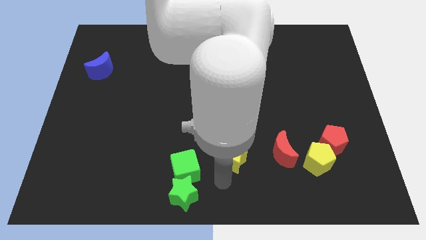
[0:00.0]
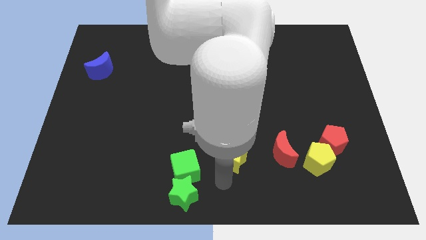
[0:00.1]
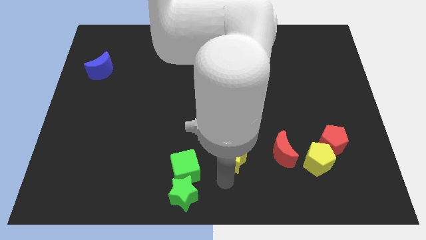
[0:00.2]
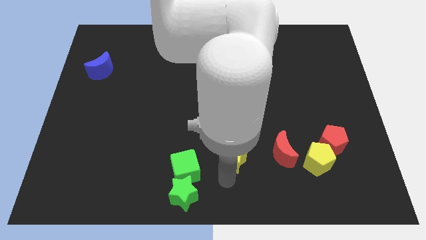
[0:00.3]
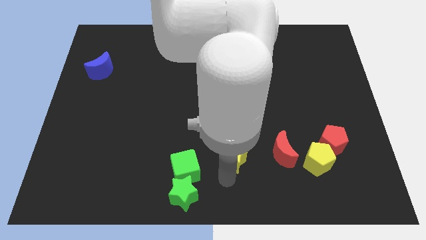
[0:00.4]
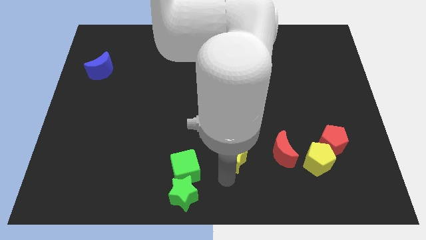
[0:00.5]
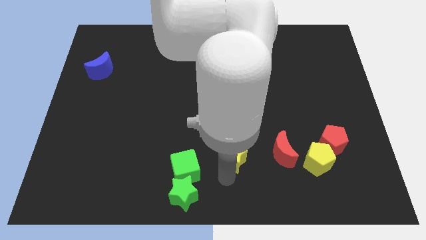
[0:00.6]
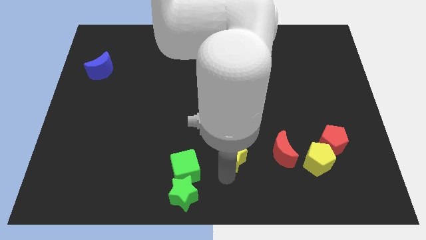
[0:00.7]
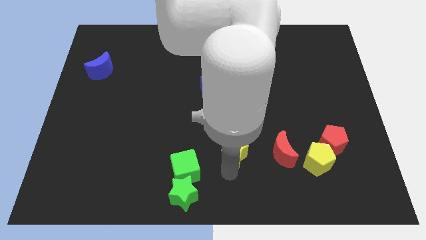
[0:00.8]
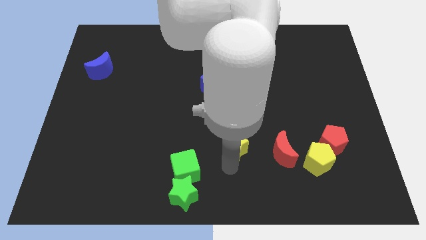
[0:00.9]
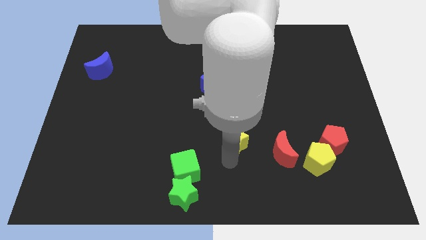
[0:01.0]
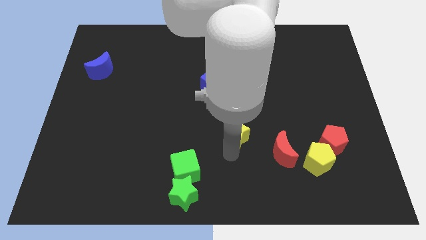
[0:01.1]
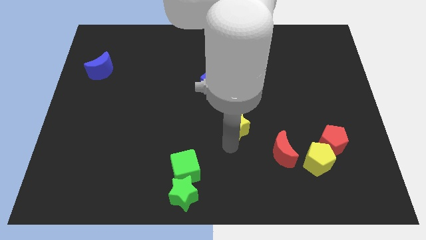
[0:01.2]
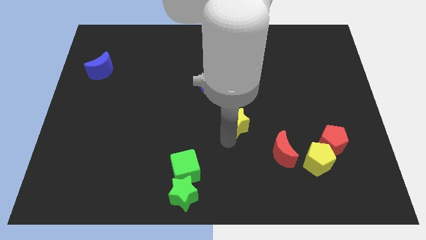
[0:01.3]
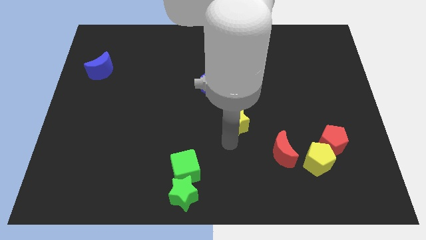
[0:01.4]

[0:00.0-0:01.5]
push the yellow star upward

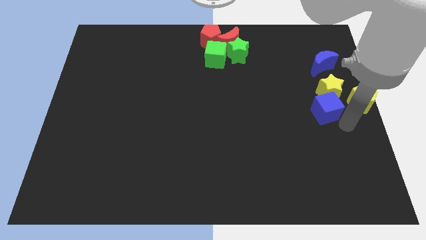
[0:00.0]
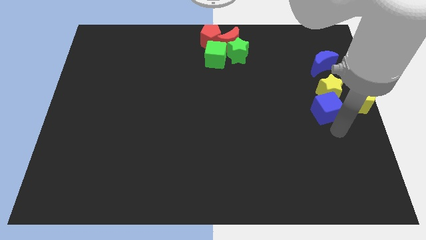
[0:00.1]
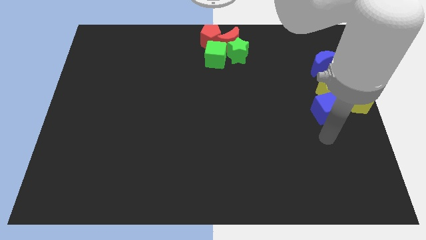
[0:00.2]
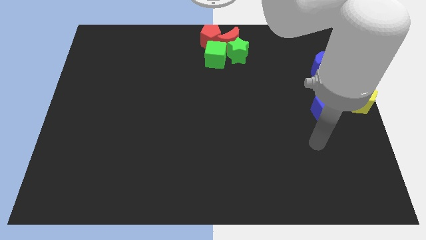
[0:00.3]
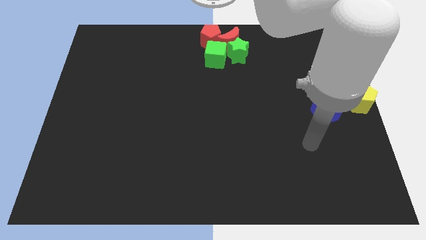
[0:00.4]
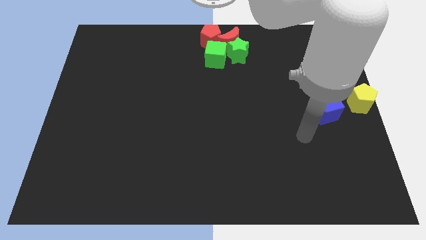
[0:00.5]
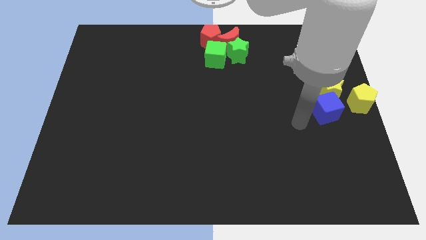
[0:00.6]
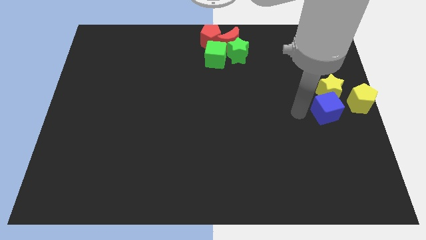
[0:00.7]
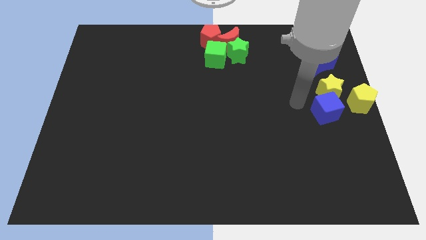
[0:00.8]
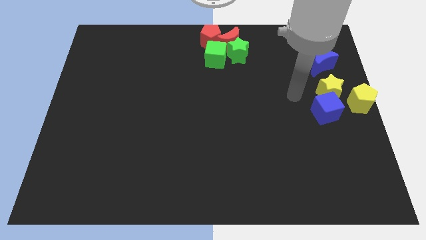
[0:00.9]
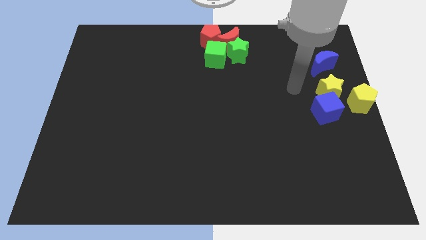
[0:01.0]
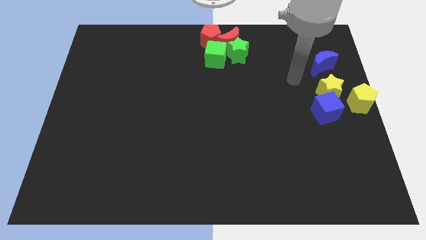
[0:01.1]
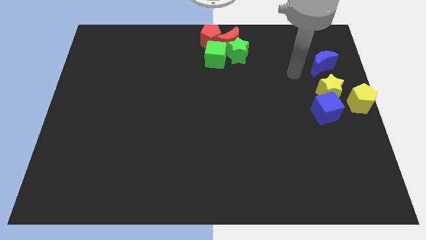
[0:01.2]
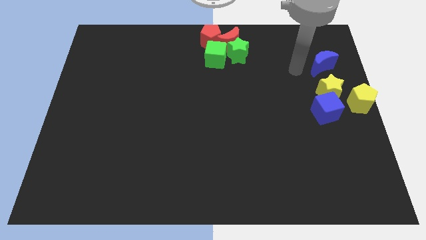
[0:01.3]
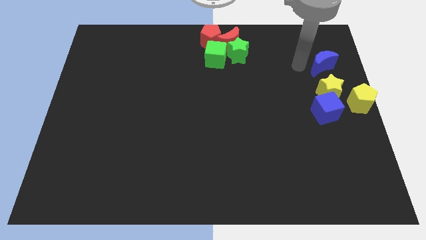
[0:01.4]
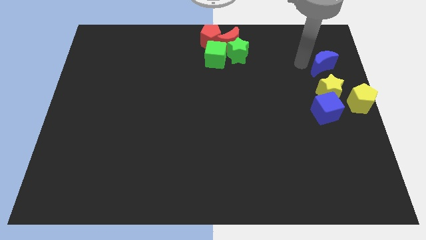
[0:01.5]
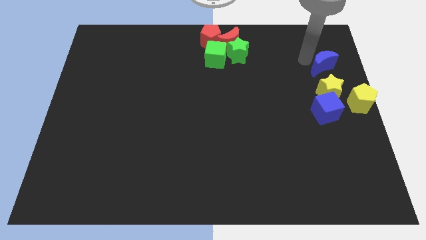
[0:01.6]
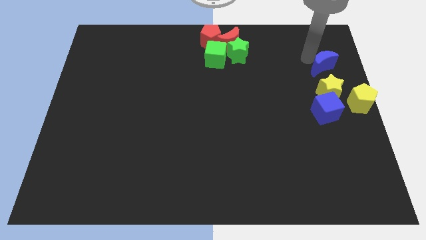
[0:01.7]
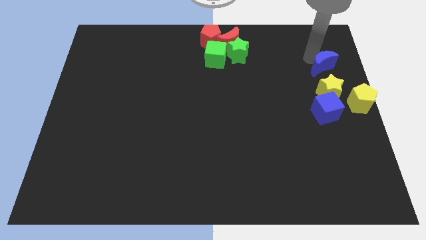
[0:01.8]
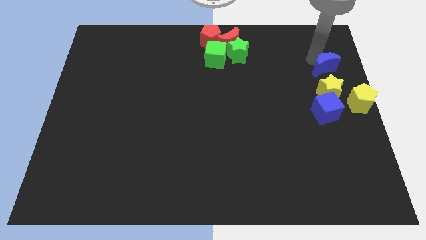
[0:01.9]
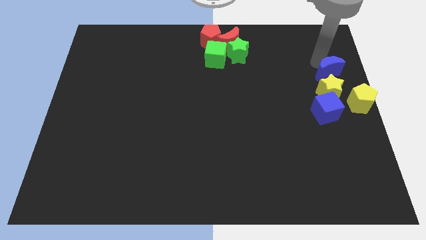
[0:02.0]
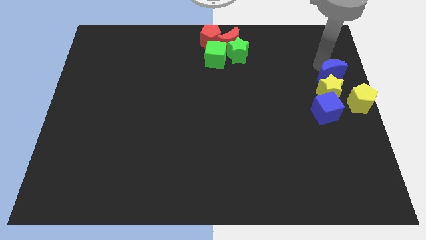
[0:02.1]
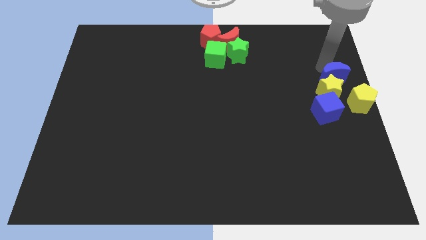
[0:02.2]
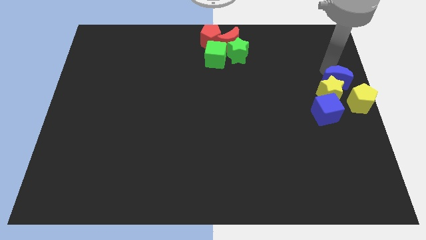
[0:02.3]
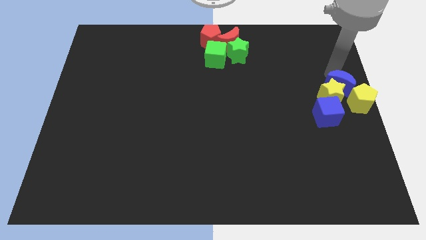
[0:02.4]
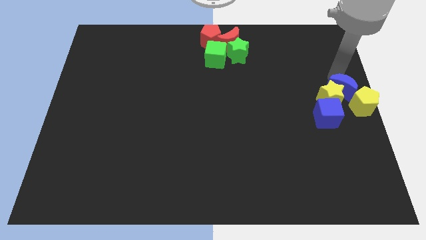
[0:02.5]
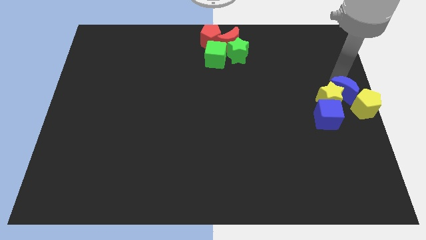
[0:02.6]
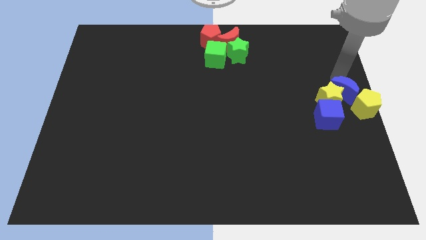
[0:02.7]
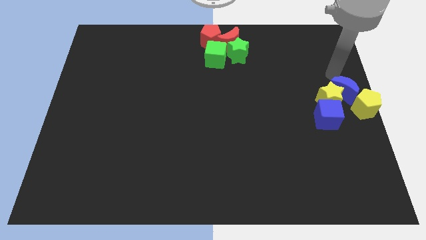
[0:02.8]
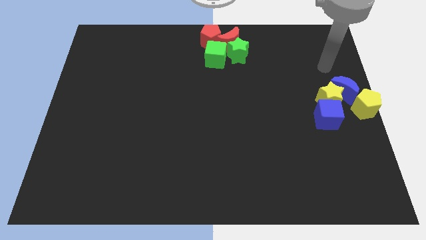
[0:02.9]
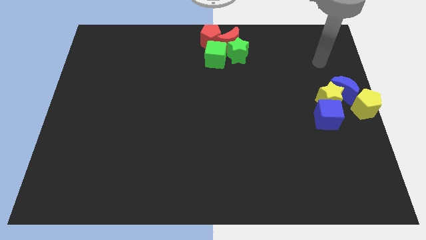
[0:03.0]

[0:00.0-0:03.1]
move blue moon into the group of blocks

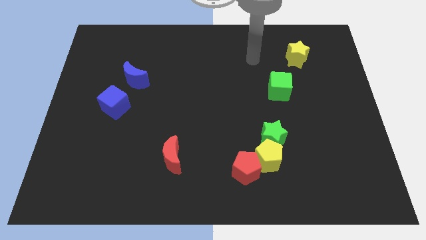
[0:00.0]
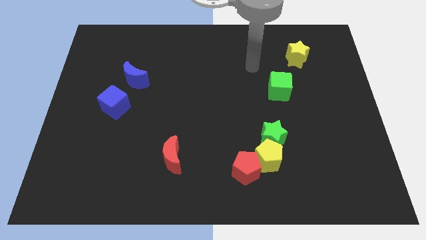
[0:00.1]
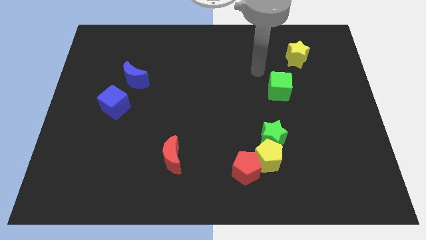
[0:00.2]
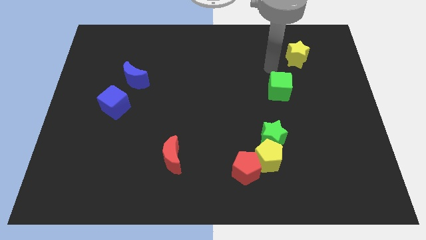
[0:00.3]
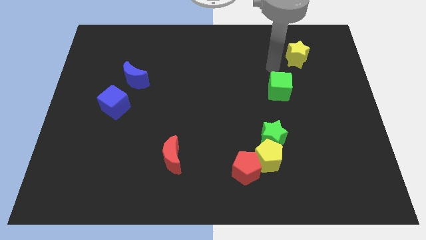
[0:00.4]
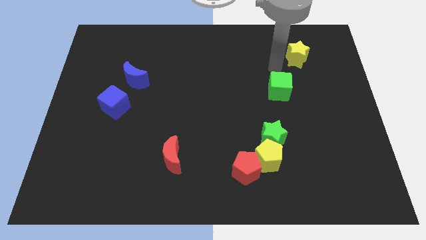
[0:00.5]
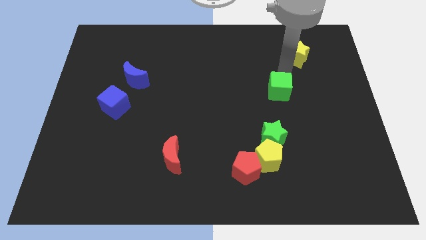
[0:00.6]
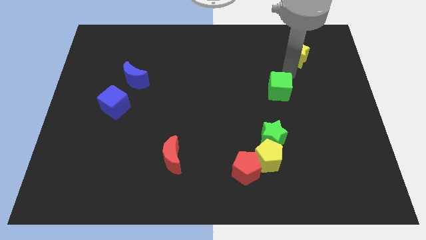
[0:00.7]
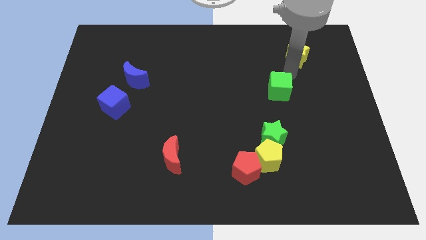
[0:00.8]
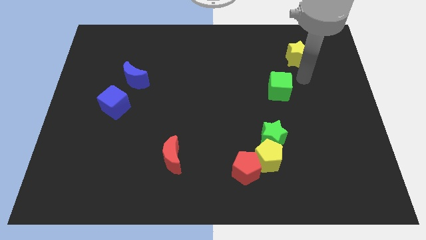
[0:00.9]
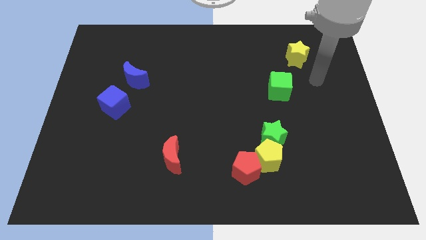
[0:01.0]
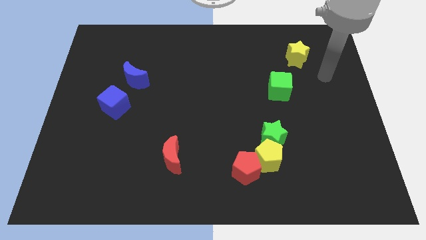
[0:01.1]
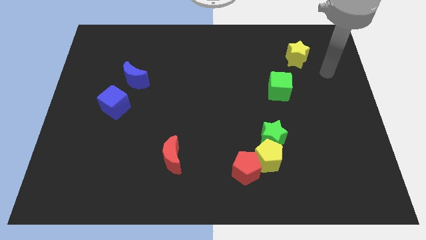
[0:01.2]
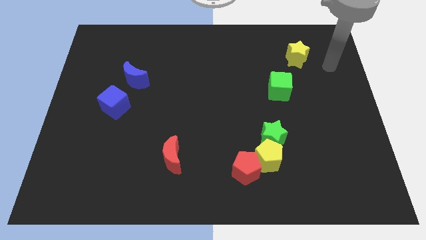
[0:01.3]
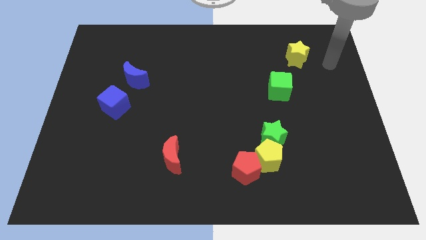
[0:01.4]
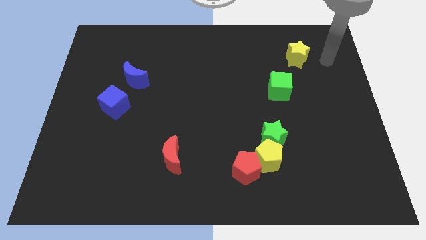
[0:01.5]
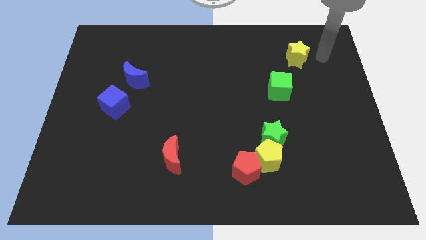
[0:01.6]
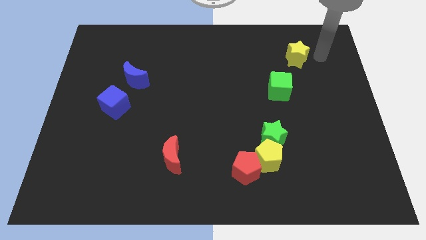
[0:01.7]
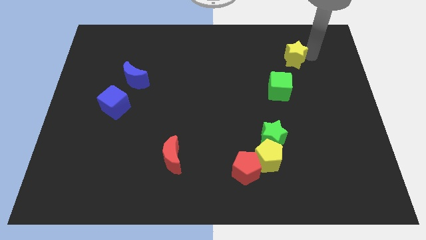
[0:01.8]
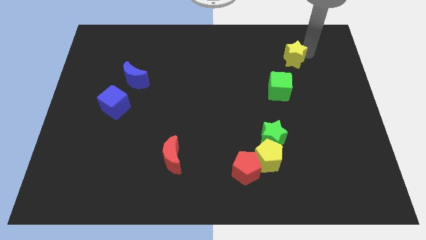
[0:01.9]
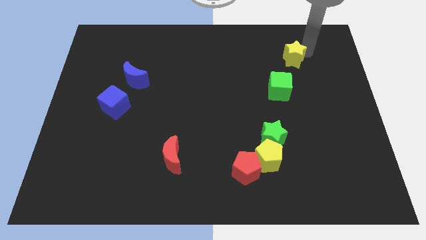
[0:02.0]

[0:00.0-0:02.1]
touch at the top right side of the yellow star

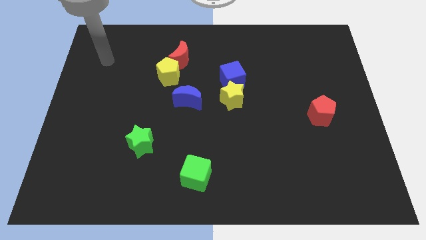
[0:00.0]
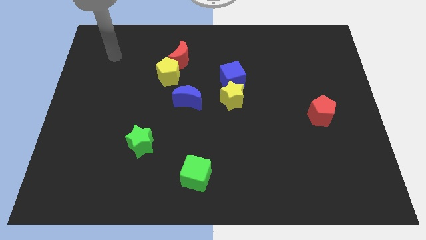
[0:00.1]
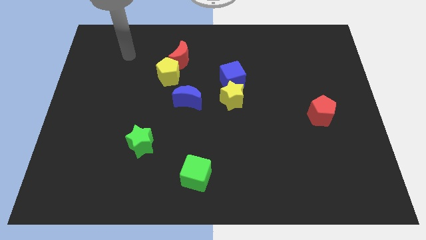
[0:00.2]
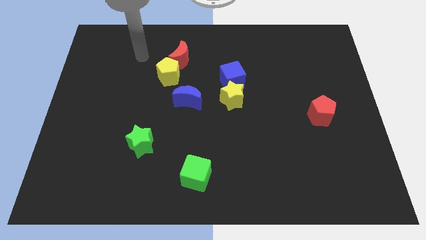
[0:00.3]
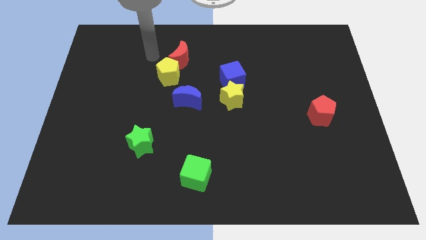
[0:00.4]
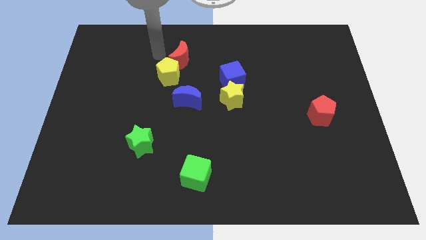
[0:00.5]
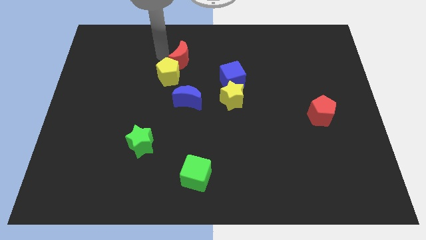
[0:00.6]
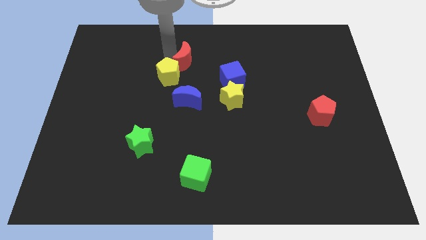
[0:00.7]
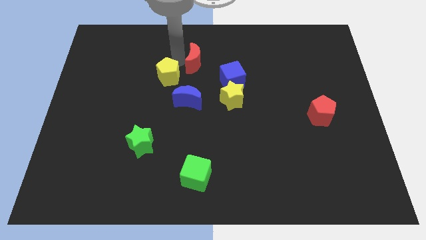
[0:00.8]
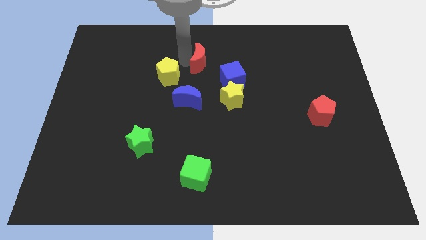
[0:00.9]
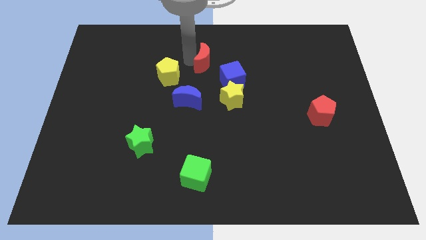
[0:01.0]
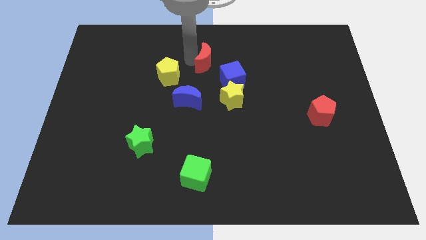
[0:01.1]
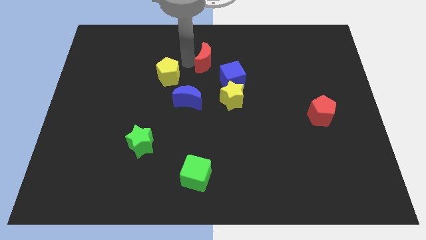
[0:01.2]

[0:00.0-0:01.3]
move red crescent towards blue cube

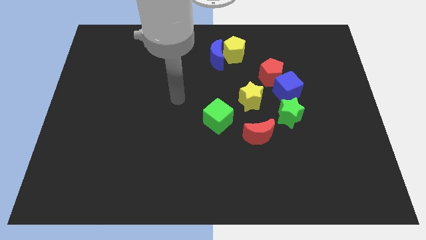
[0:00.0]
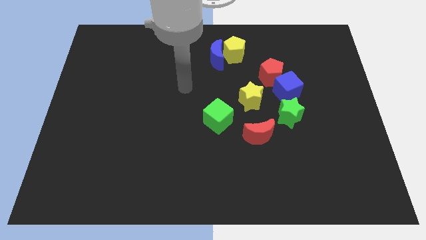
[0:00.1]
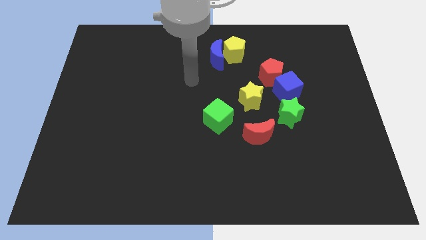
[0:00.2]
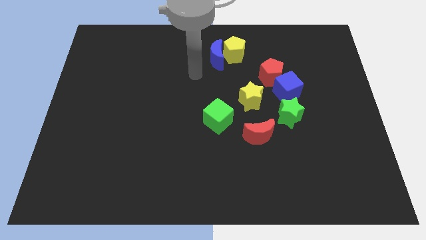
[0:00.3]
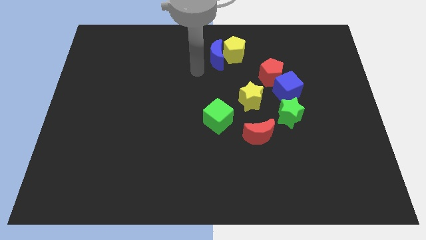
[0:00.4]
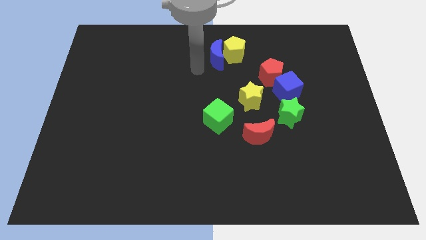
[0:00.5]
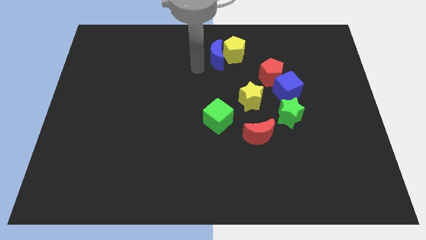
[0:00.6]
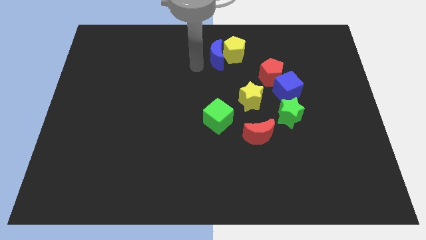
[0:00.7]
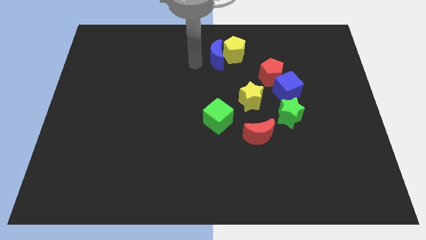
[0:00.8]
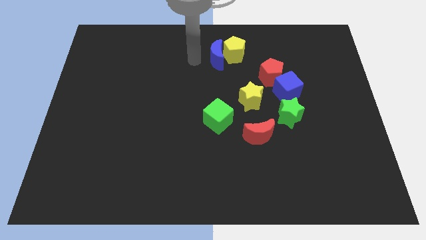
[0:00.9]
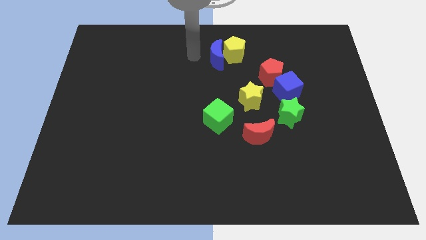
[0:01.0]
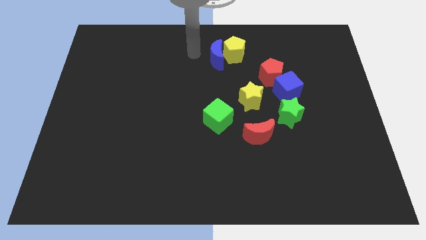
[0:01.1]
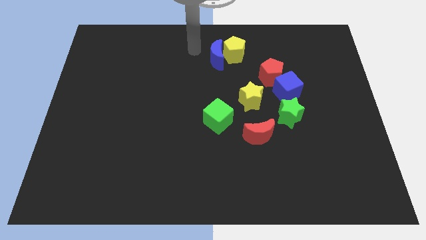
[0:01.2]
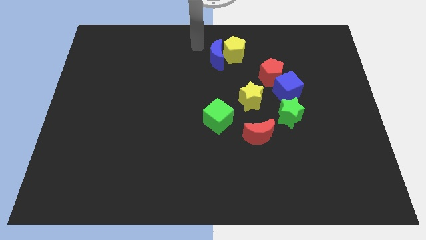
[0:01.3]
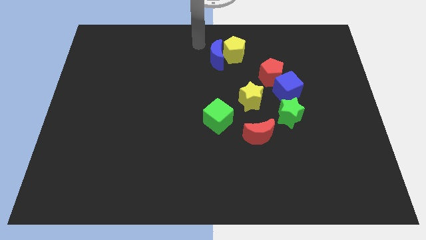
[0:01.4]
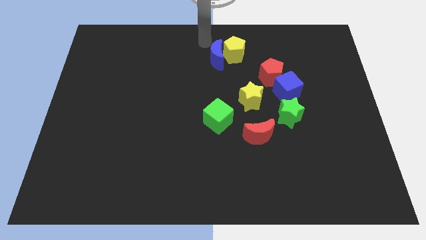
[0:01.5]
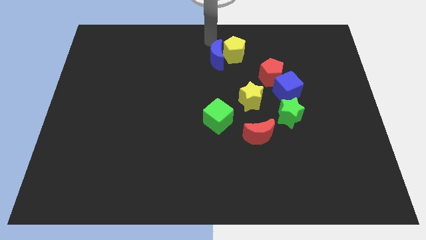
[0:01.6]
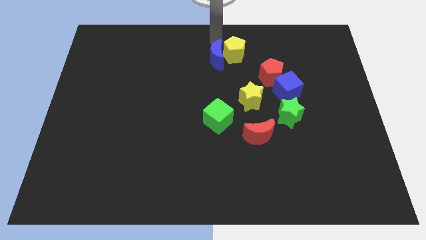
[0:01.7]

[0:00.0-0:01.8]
point the arm above the blue moon
